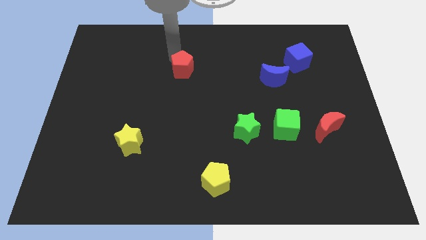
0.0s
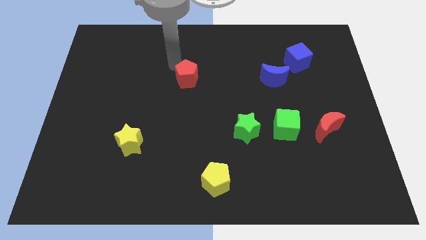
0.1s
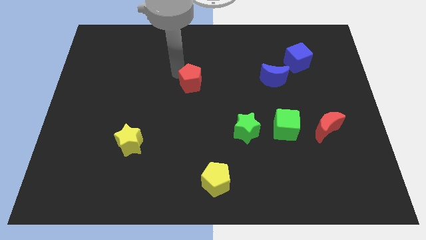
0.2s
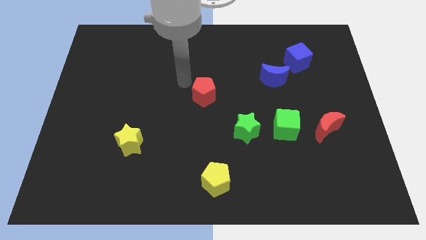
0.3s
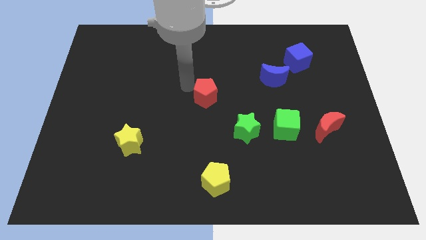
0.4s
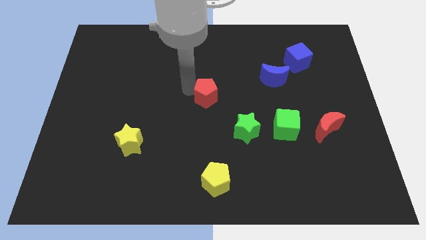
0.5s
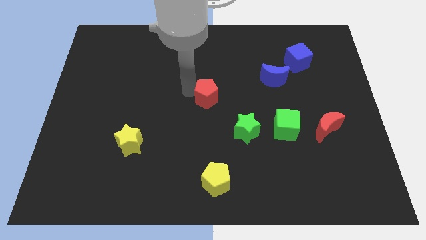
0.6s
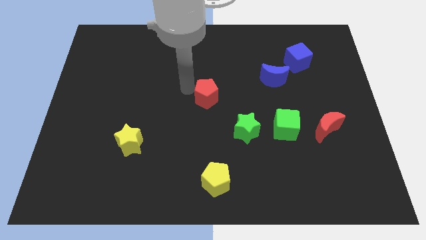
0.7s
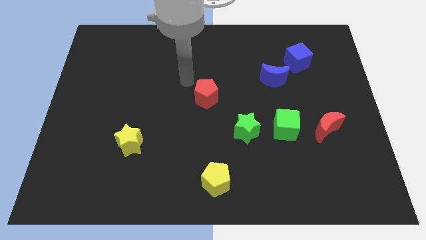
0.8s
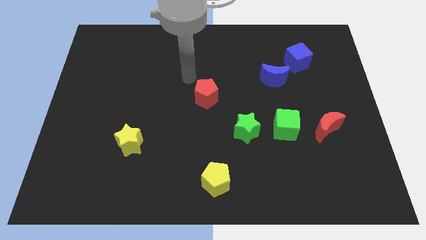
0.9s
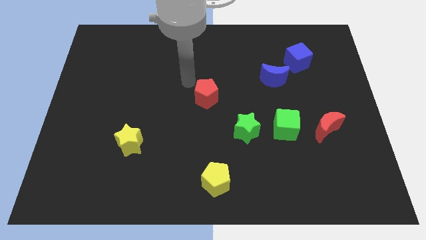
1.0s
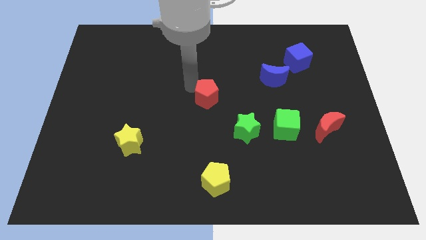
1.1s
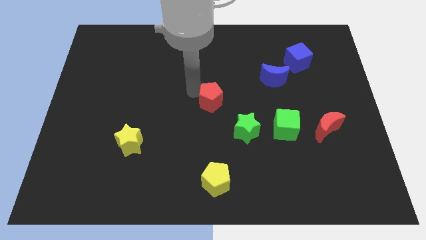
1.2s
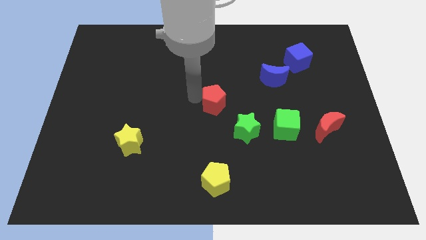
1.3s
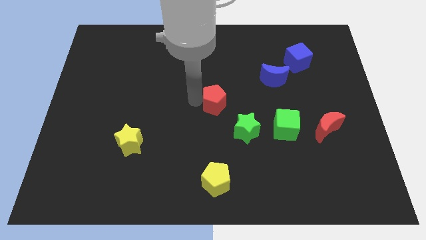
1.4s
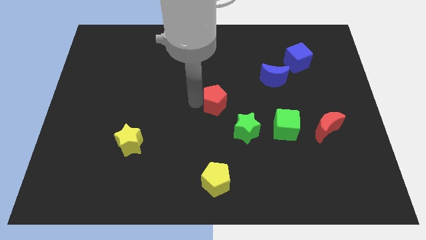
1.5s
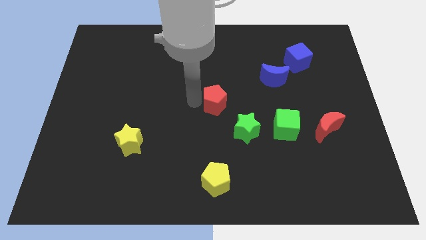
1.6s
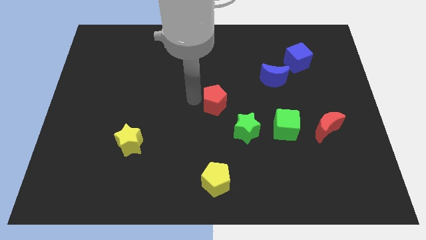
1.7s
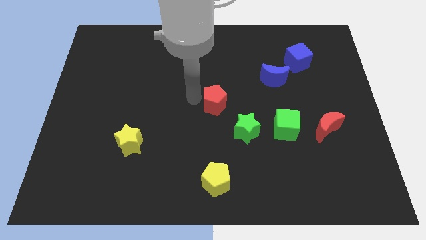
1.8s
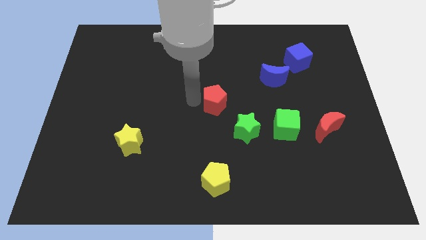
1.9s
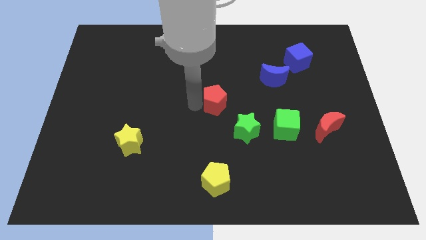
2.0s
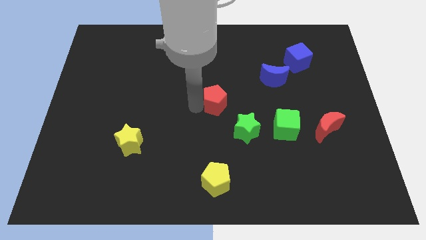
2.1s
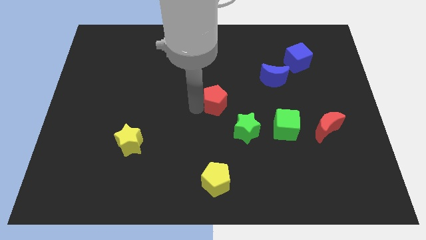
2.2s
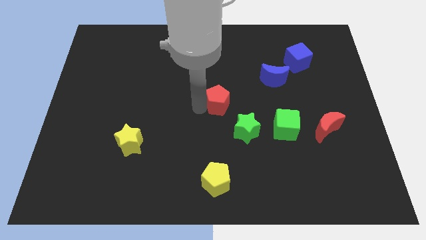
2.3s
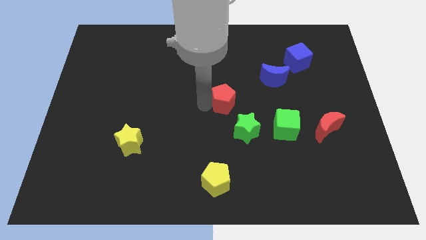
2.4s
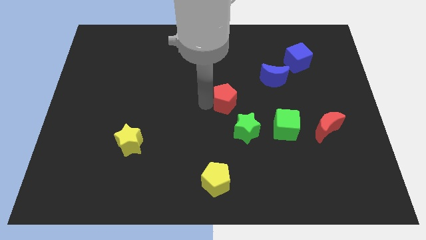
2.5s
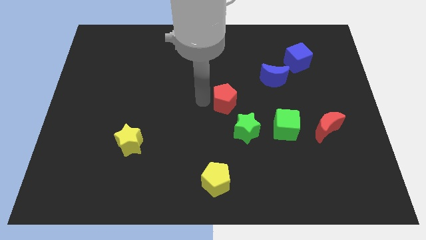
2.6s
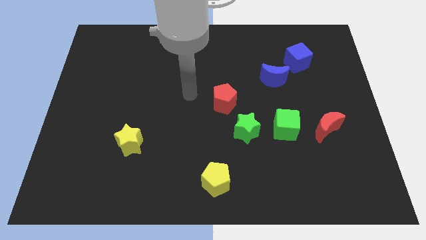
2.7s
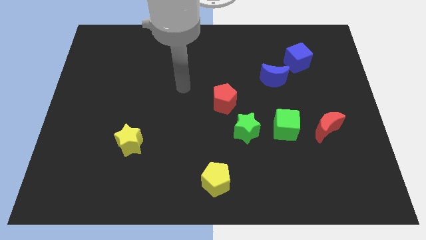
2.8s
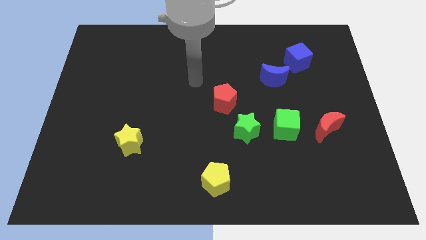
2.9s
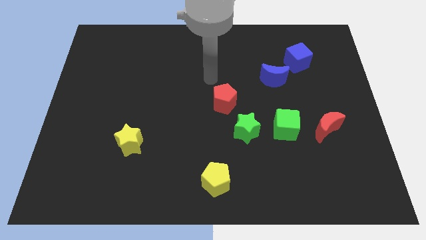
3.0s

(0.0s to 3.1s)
place the red pentagon to the center of the board

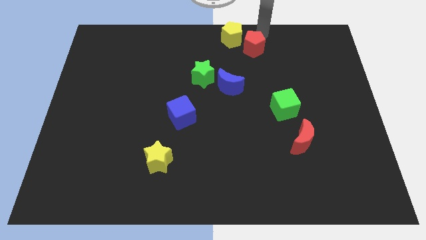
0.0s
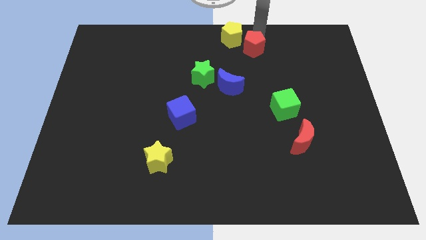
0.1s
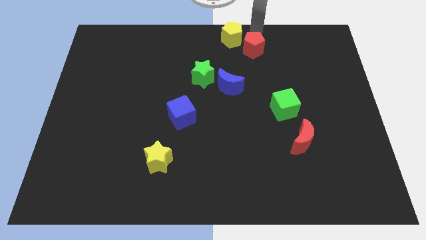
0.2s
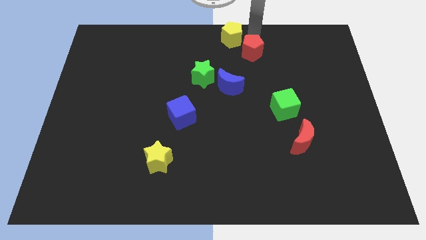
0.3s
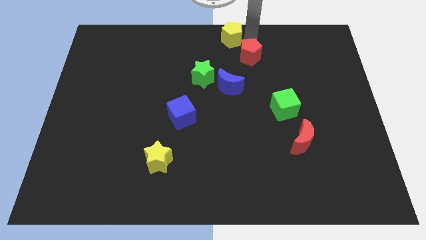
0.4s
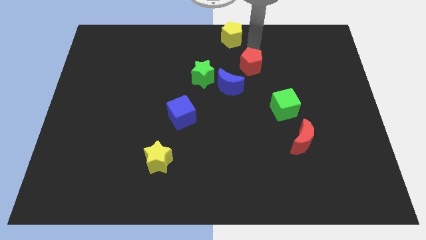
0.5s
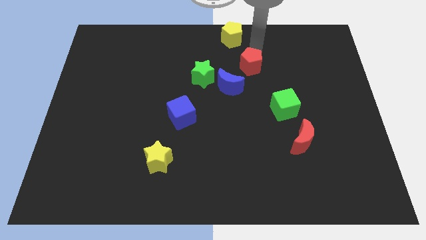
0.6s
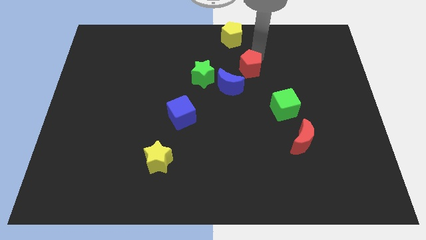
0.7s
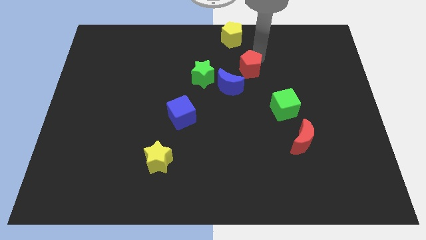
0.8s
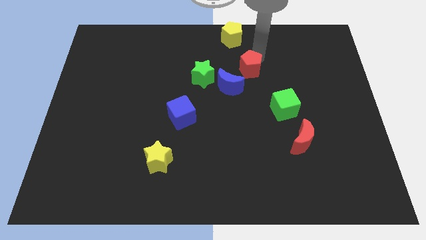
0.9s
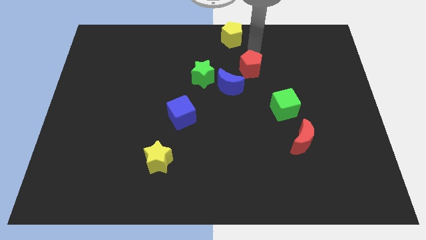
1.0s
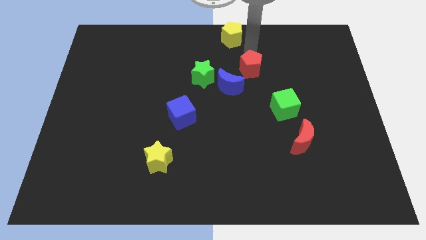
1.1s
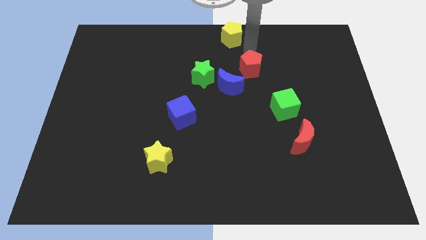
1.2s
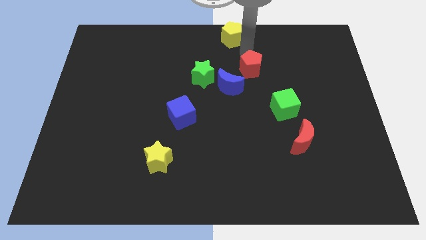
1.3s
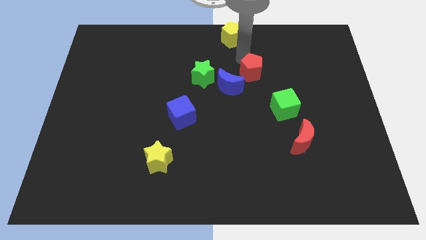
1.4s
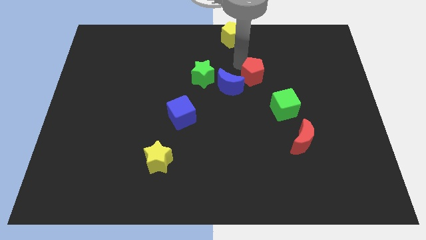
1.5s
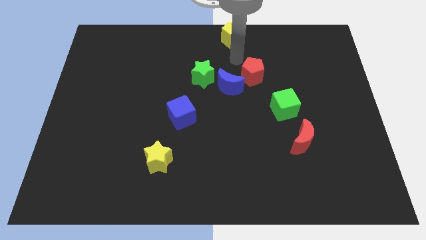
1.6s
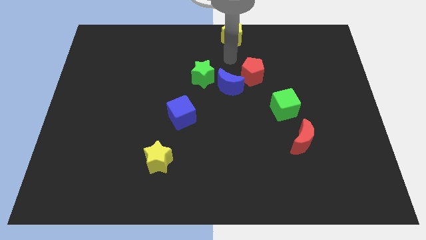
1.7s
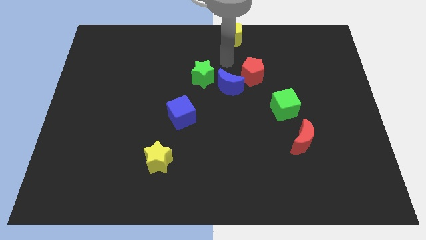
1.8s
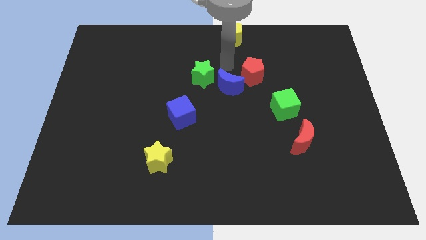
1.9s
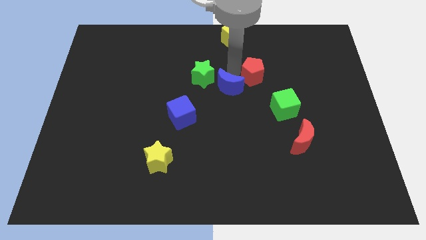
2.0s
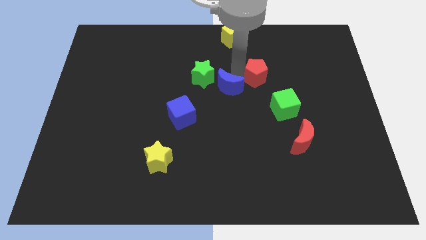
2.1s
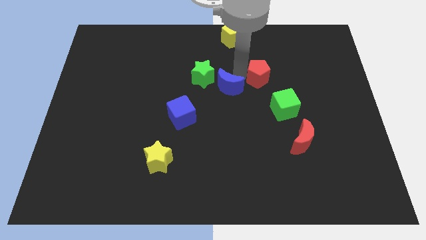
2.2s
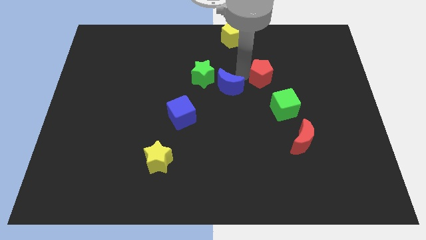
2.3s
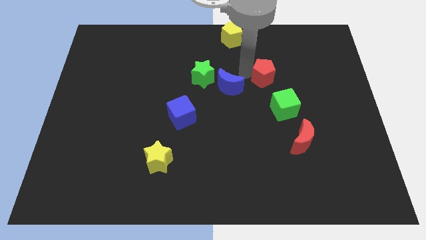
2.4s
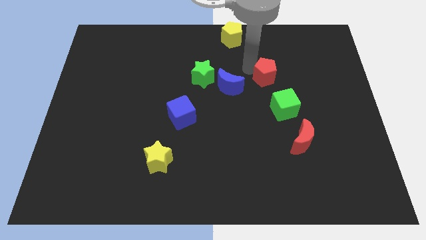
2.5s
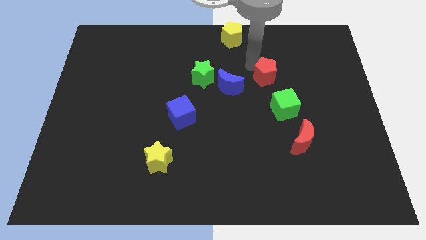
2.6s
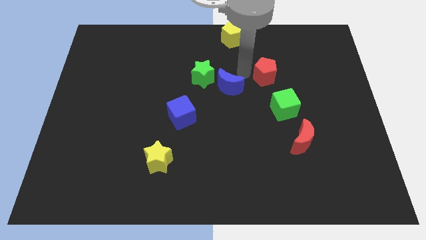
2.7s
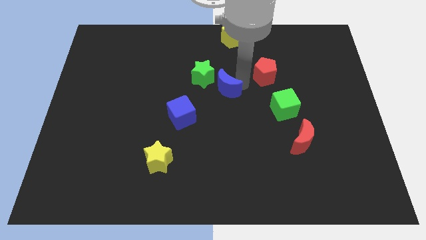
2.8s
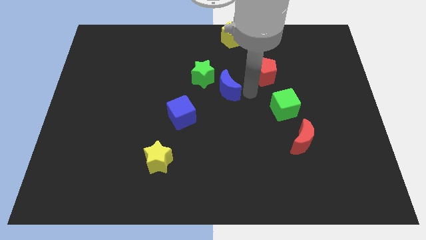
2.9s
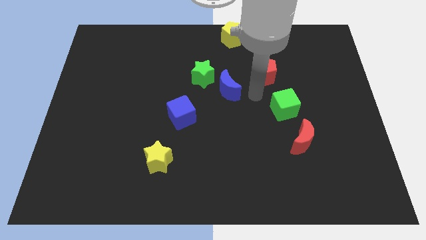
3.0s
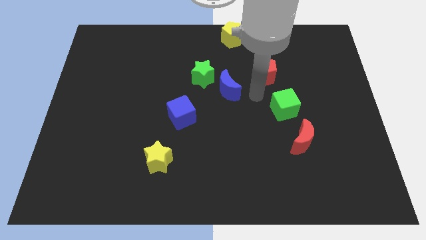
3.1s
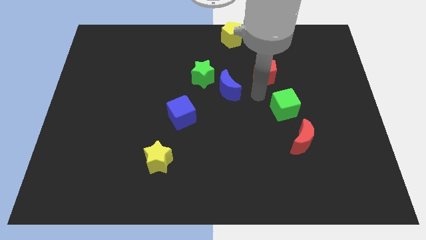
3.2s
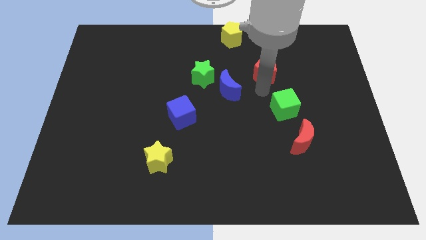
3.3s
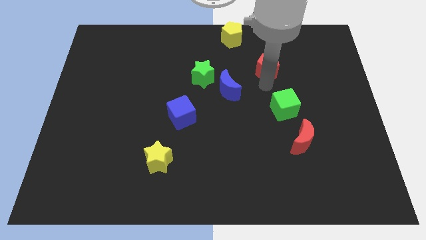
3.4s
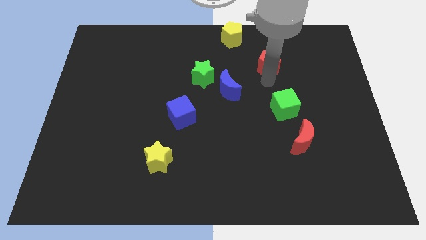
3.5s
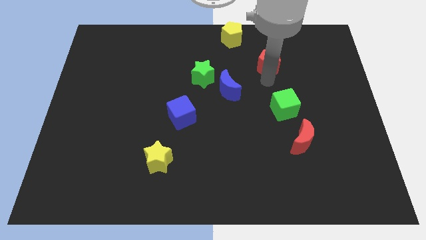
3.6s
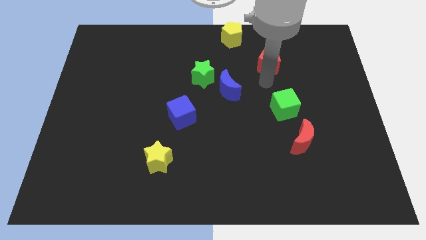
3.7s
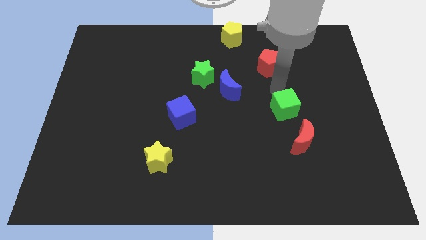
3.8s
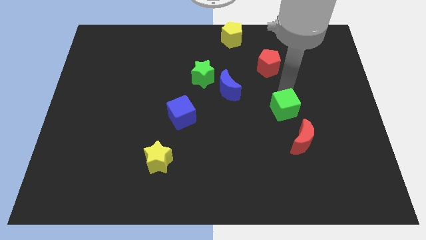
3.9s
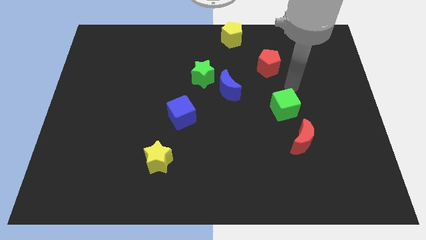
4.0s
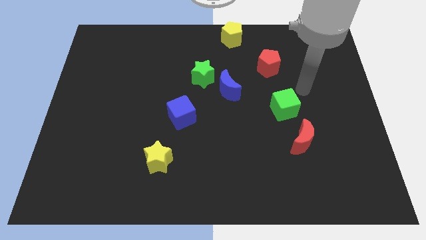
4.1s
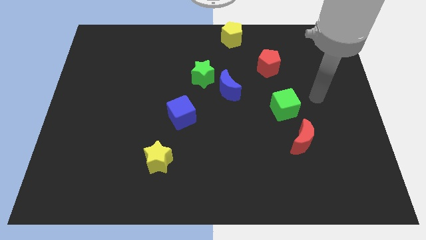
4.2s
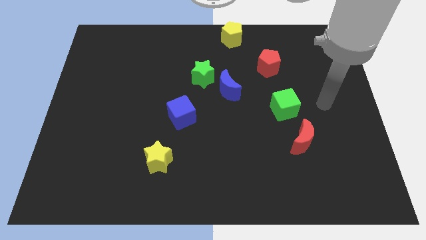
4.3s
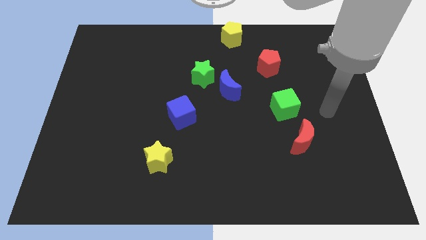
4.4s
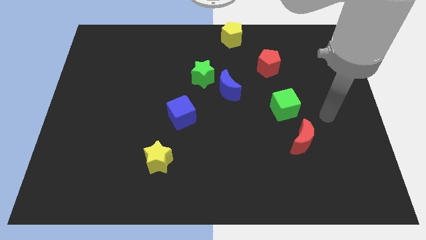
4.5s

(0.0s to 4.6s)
place the red pentagon diagonally bottom right to the yellow pentagon

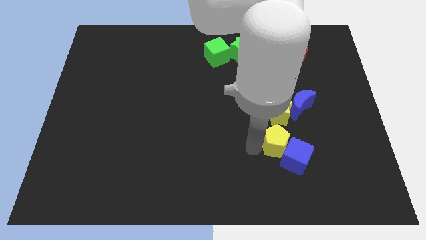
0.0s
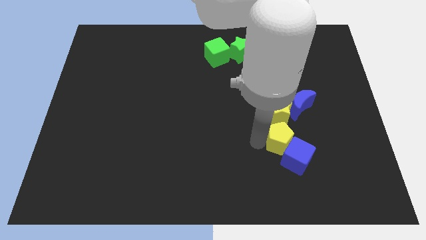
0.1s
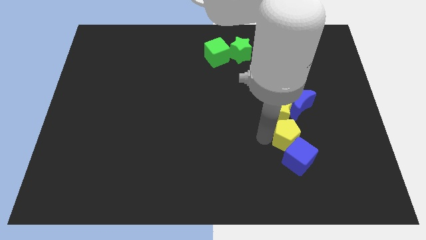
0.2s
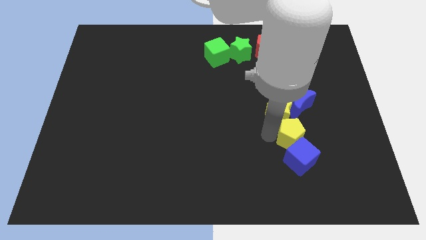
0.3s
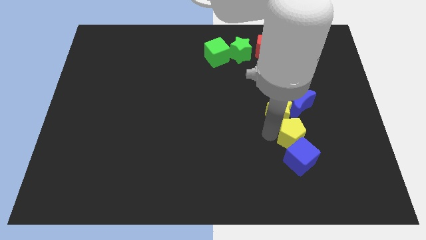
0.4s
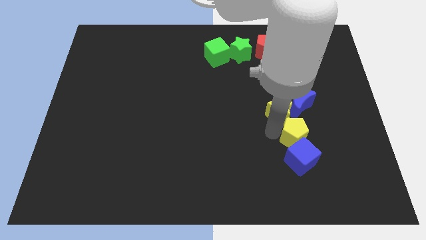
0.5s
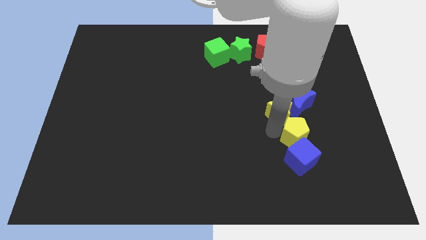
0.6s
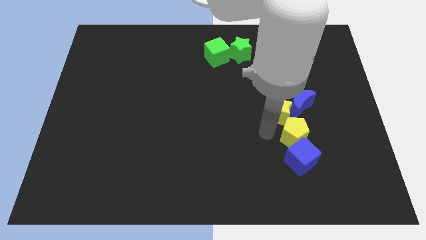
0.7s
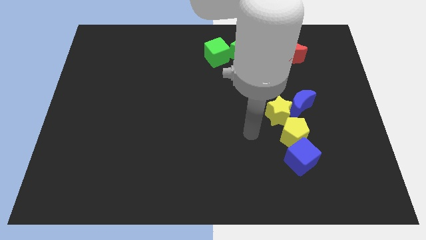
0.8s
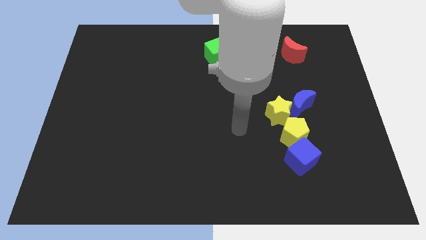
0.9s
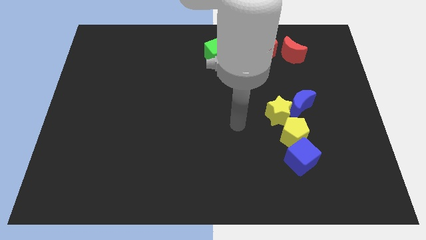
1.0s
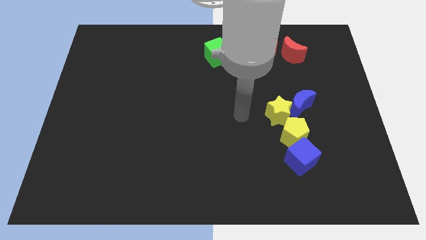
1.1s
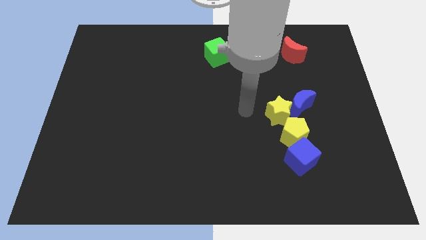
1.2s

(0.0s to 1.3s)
place the yellow pentagon in between two blue blocks
